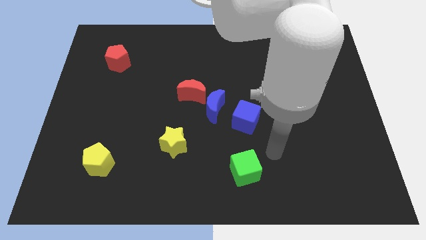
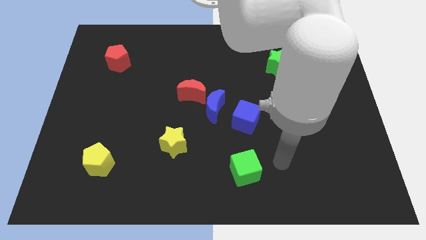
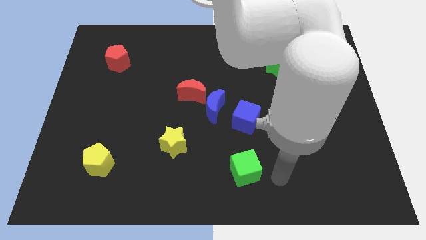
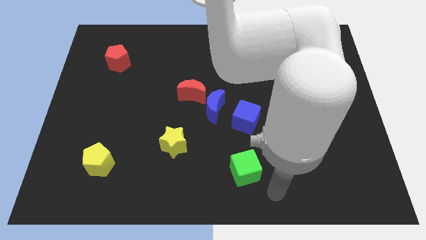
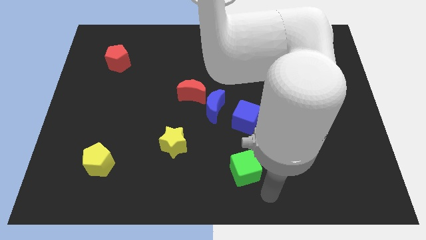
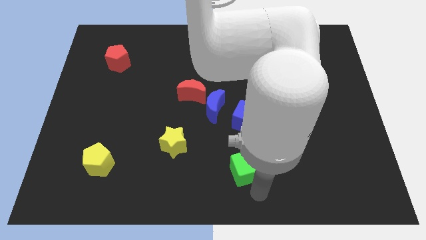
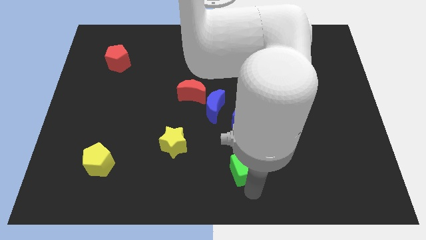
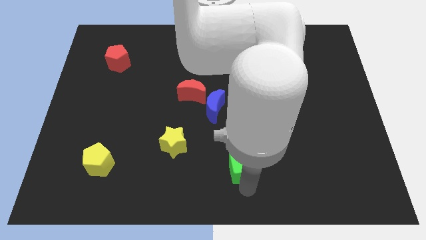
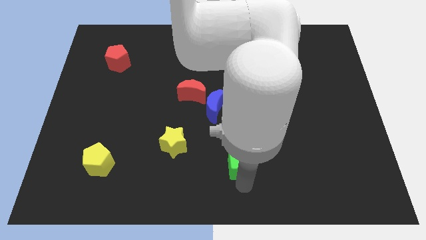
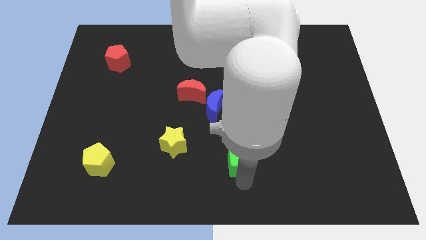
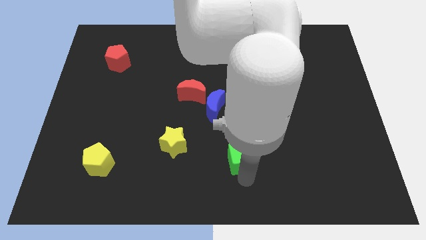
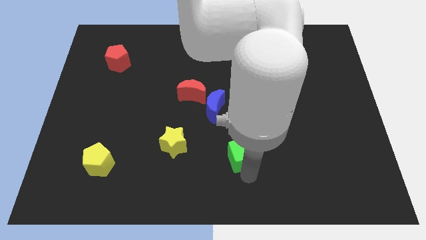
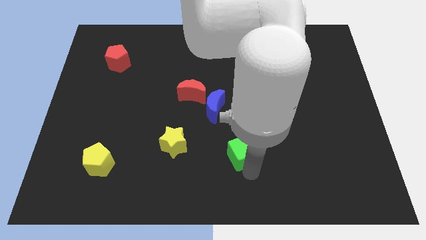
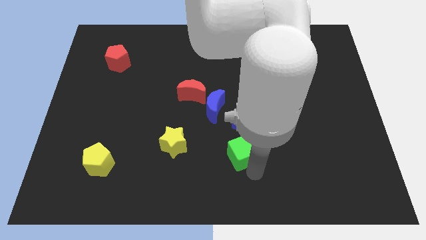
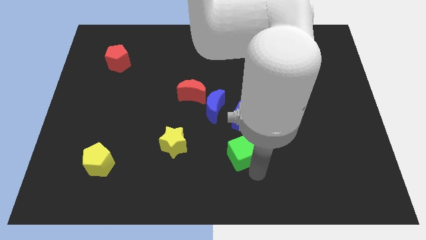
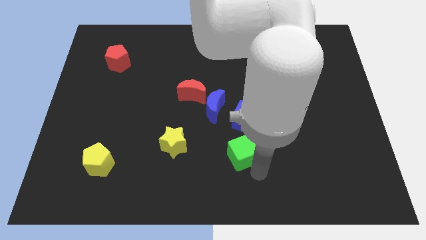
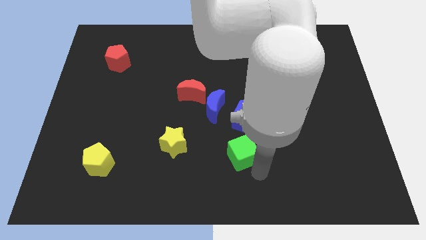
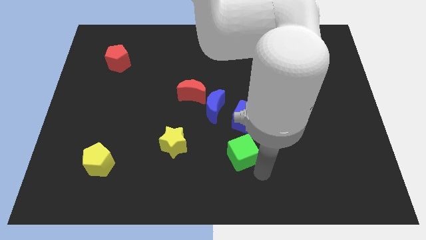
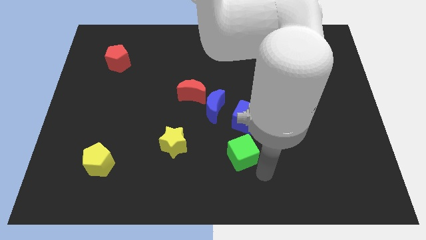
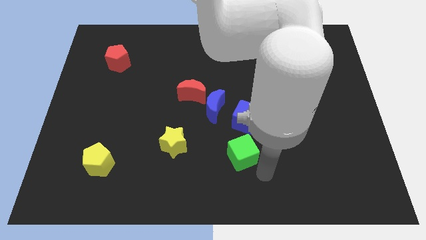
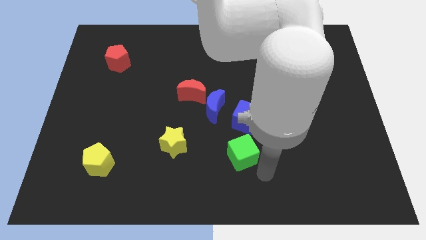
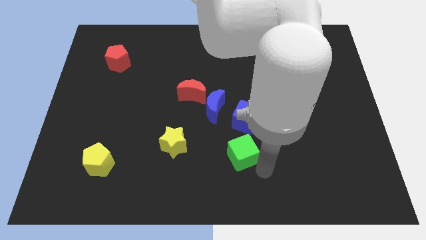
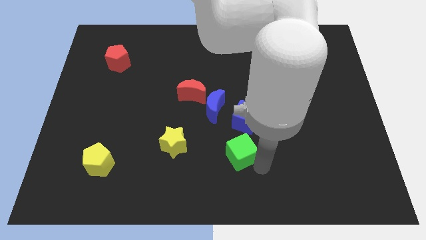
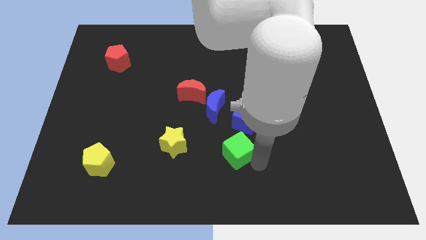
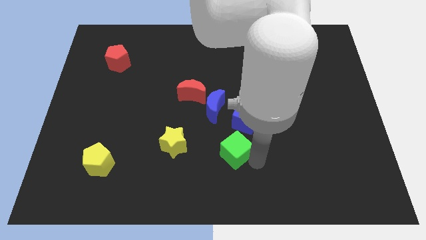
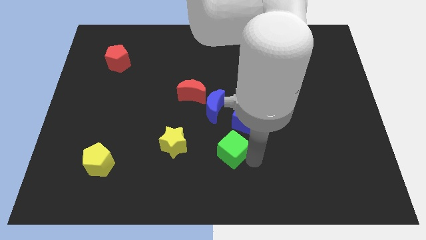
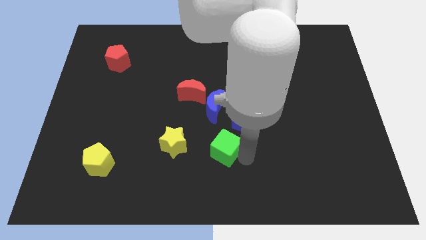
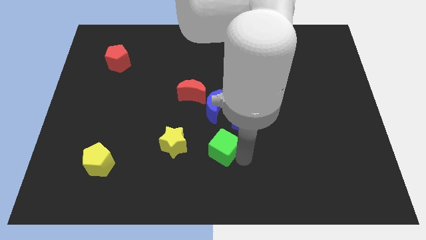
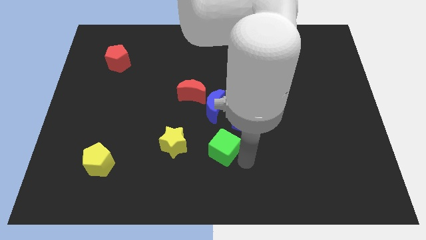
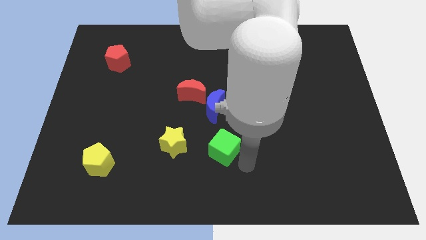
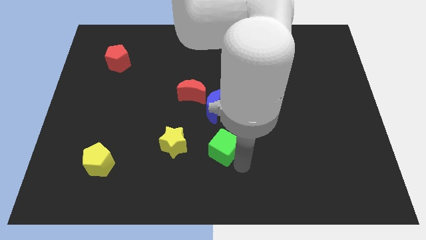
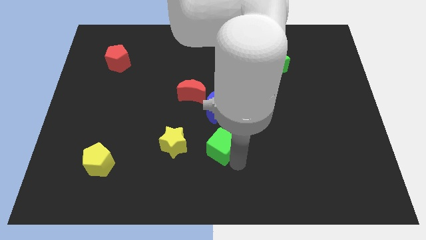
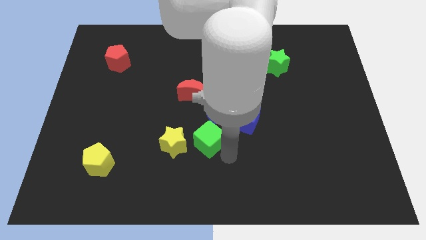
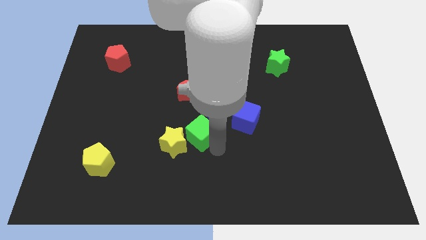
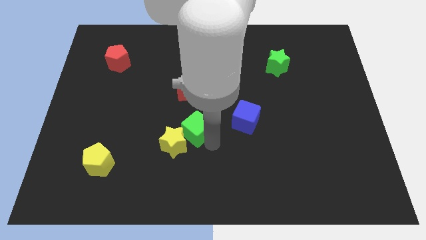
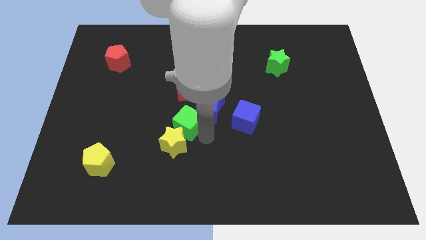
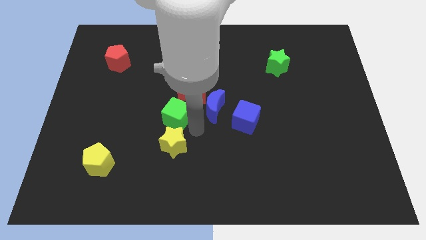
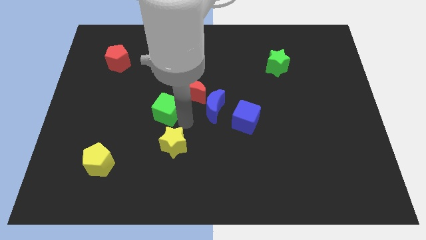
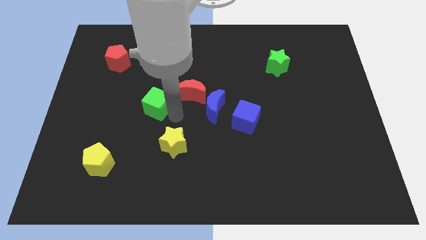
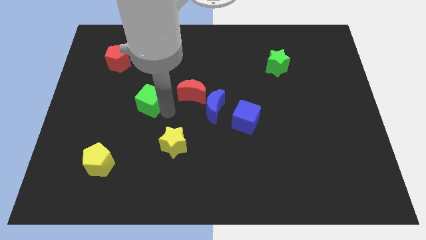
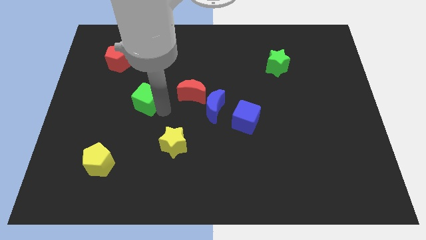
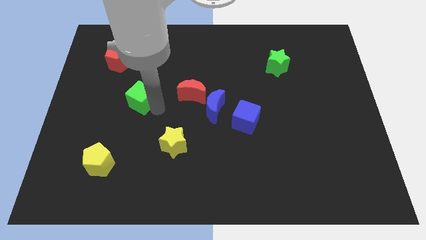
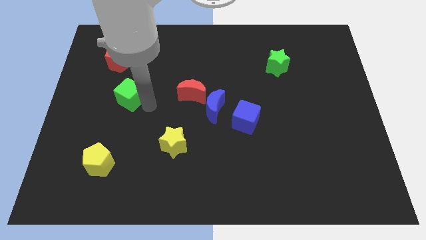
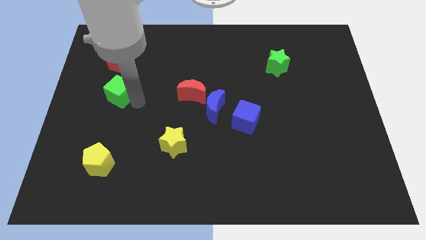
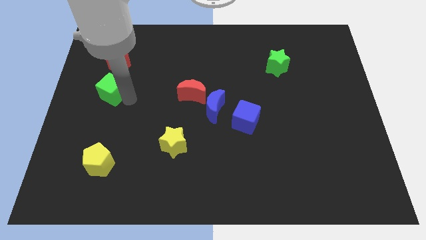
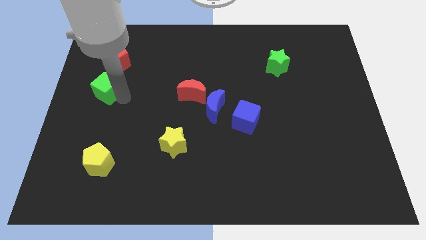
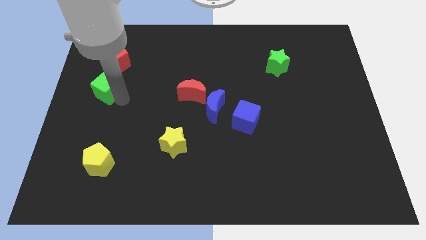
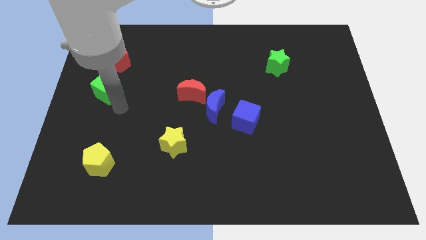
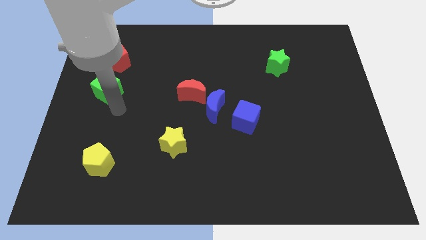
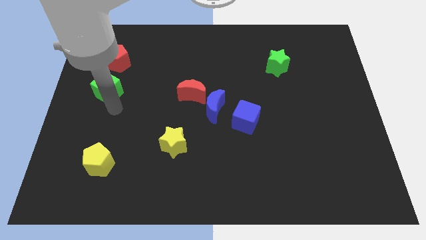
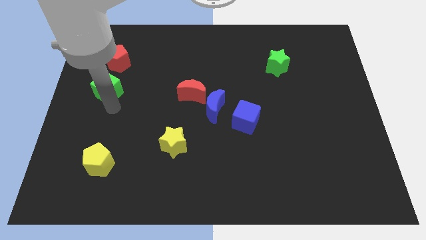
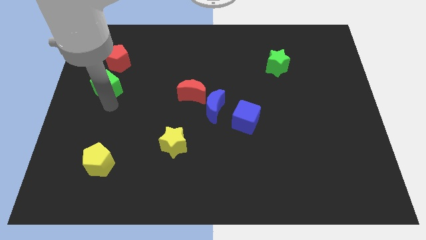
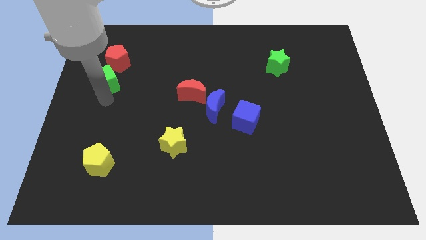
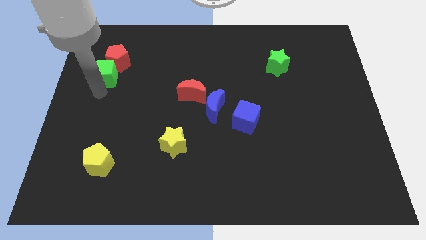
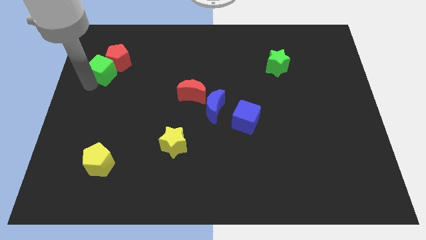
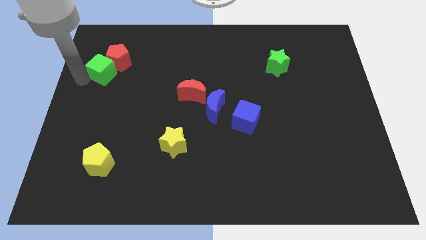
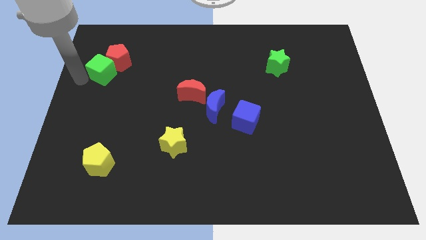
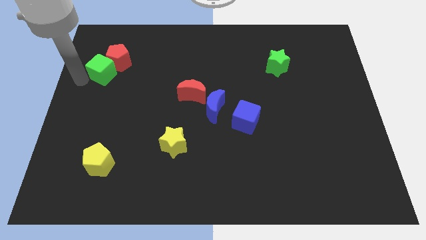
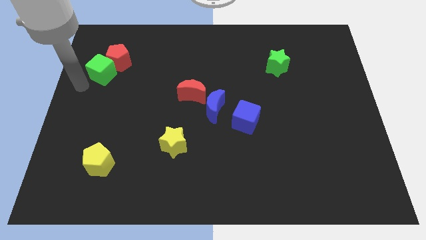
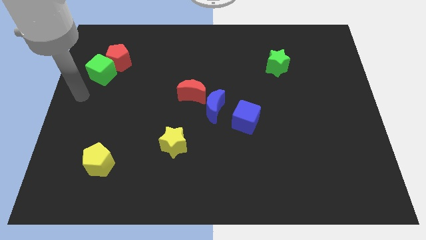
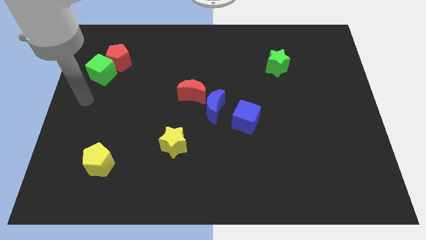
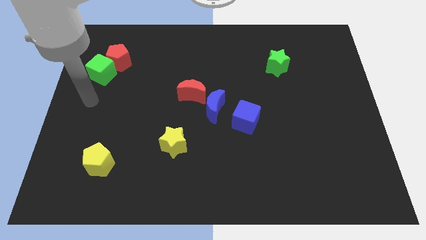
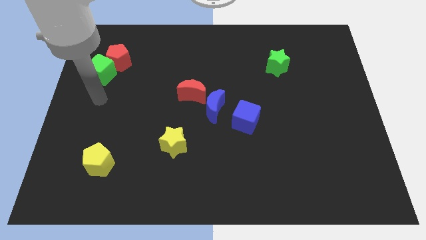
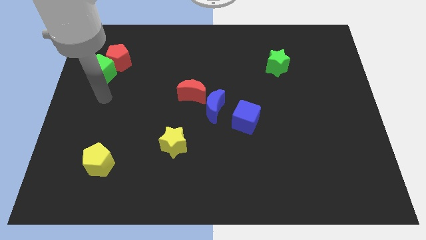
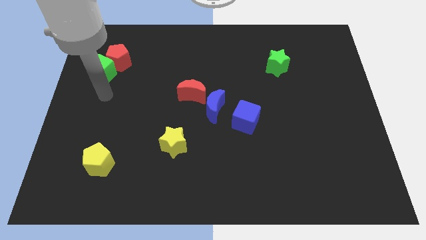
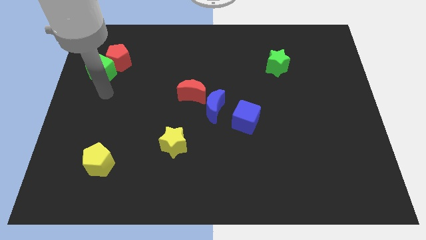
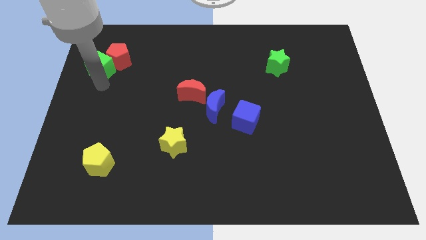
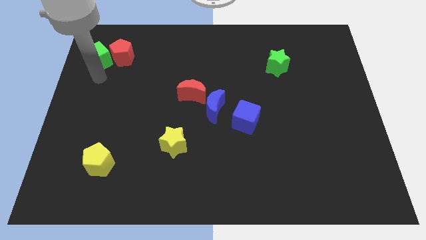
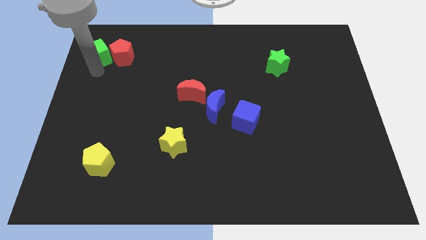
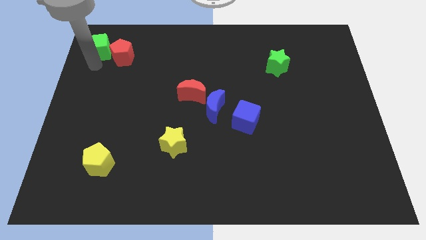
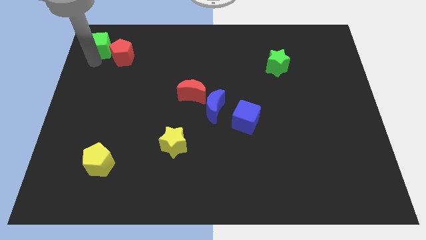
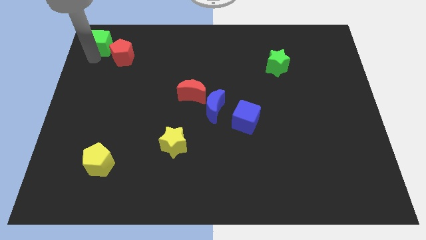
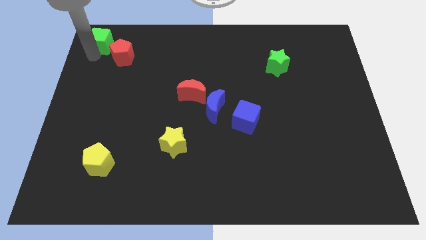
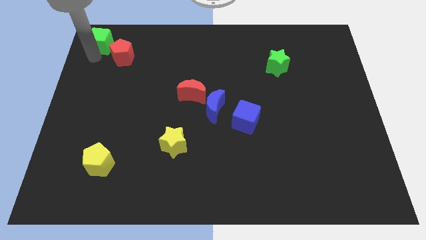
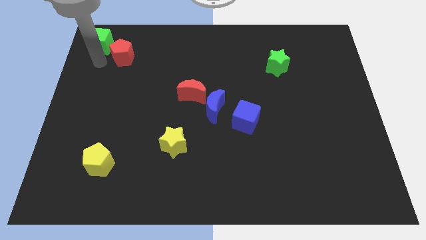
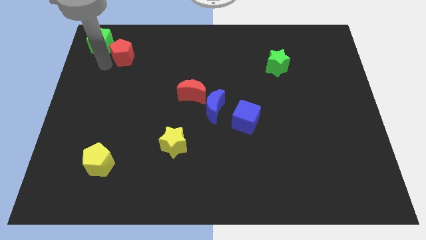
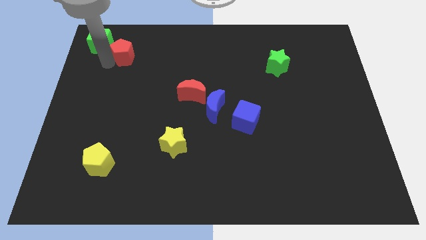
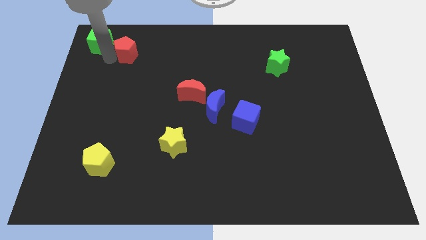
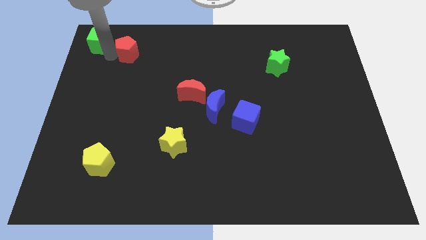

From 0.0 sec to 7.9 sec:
place the green cube at the top left corner of the board

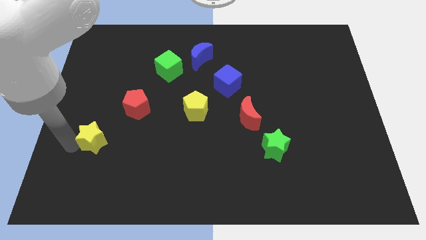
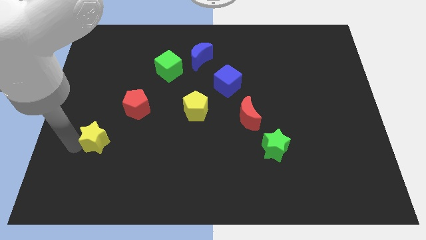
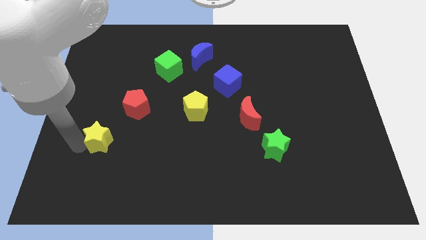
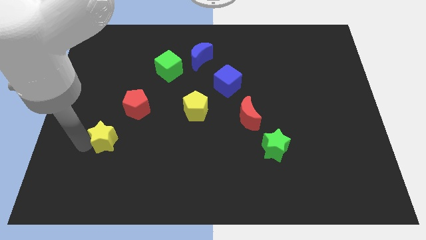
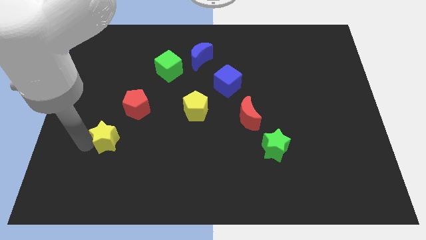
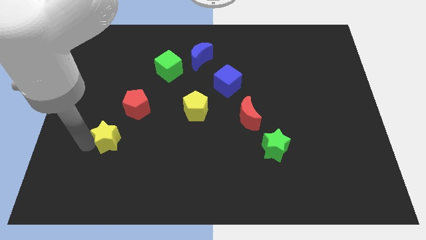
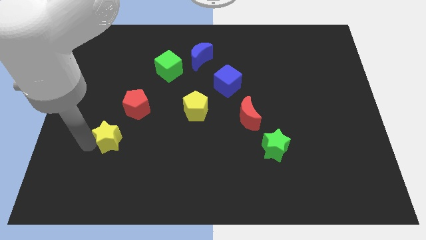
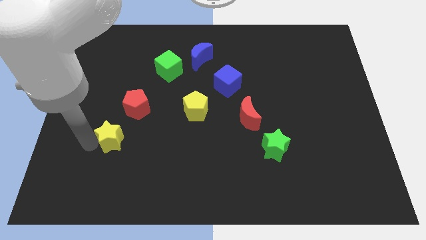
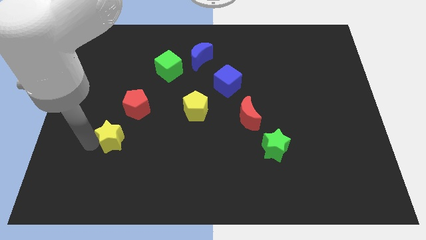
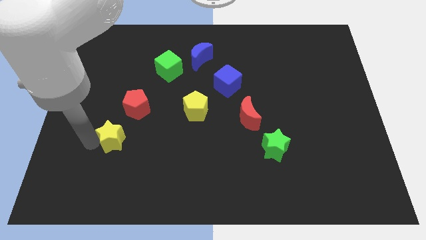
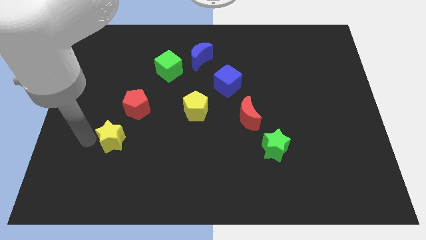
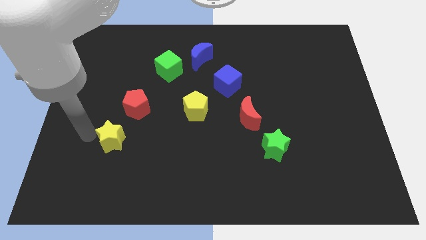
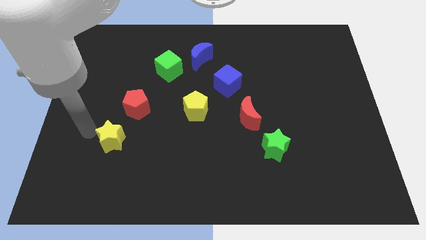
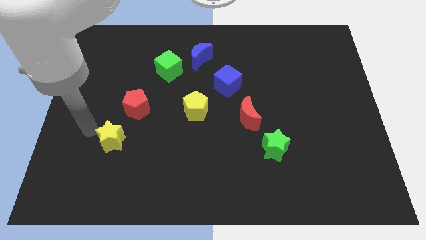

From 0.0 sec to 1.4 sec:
move the yellow star slightly to the right
